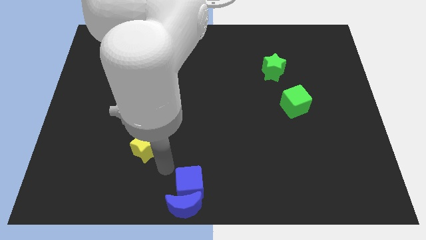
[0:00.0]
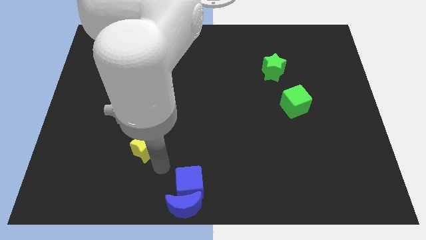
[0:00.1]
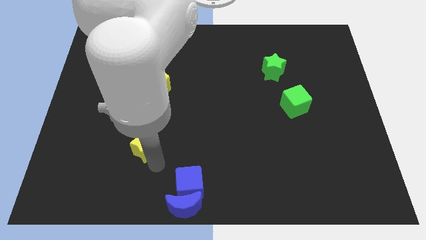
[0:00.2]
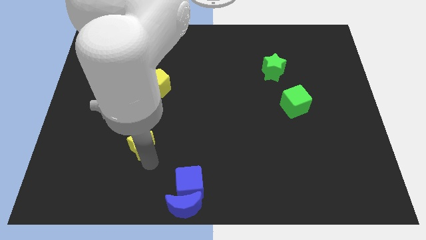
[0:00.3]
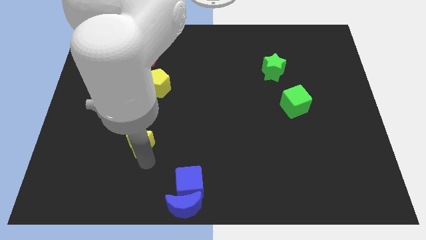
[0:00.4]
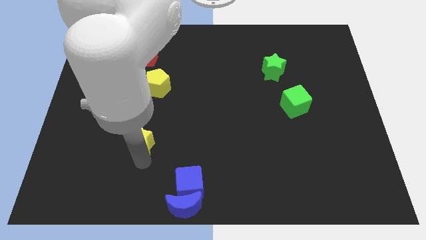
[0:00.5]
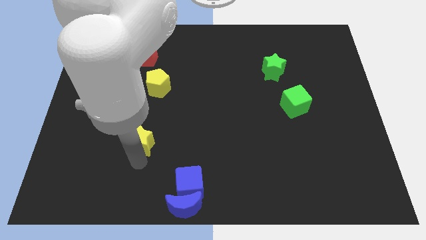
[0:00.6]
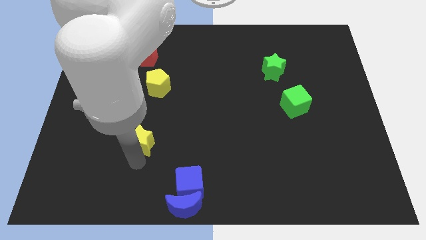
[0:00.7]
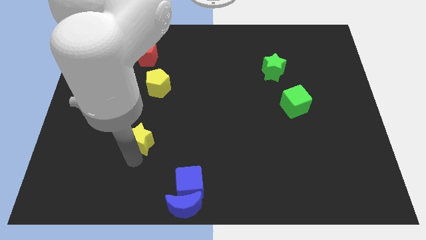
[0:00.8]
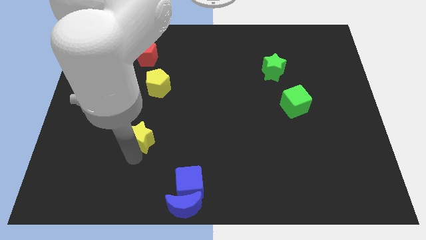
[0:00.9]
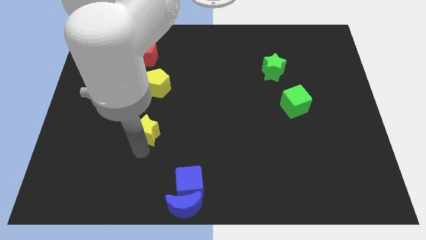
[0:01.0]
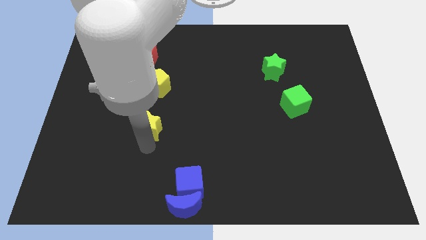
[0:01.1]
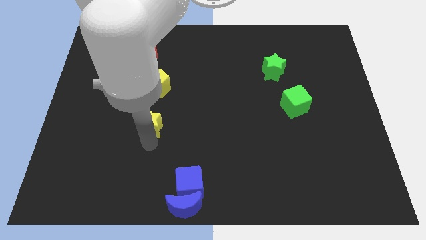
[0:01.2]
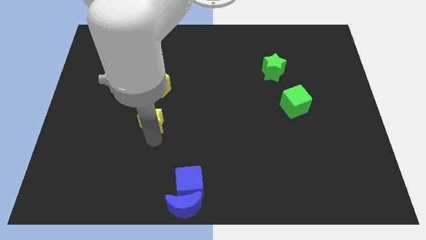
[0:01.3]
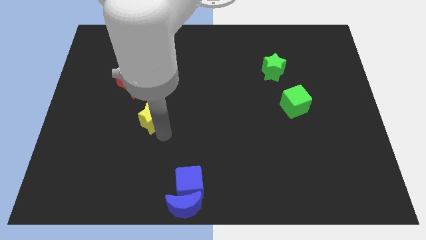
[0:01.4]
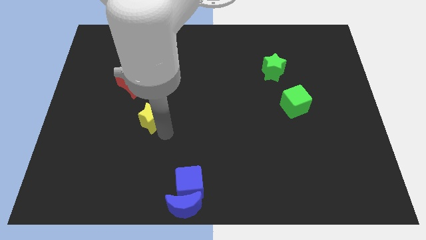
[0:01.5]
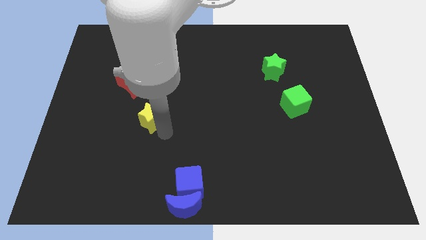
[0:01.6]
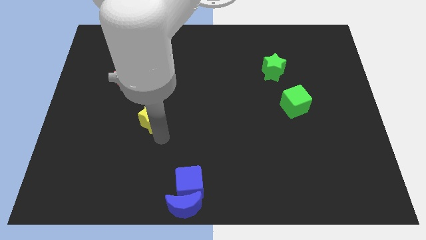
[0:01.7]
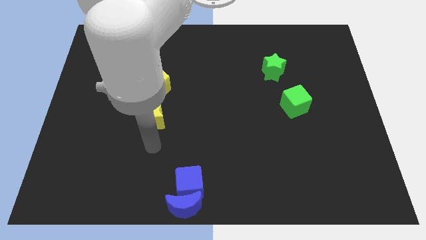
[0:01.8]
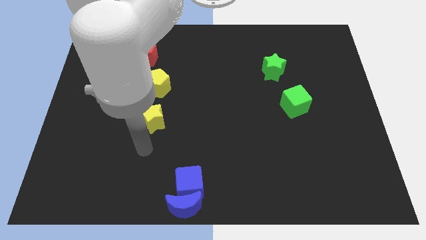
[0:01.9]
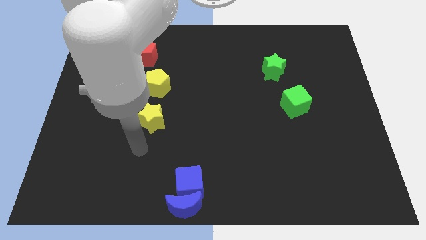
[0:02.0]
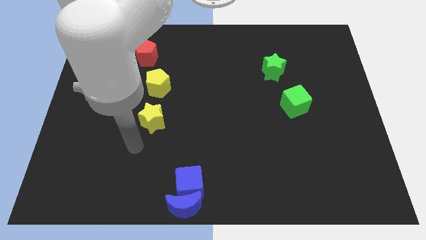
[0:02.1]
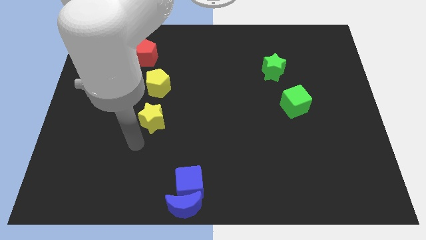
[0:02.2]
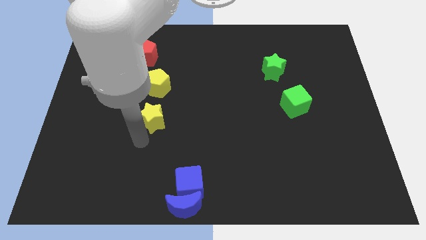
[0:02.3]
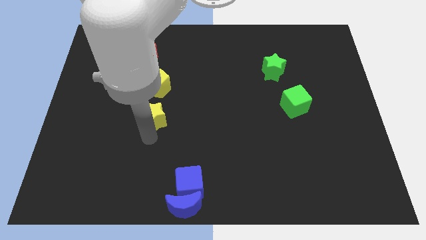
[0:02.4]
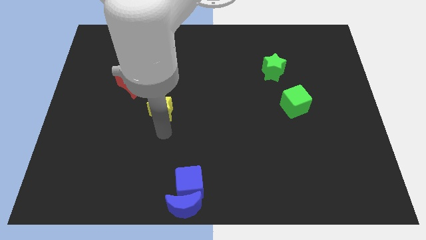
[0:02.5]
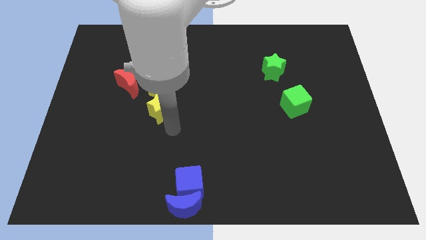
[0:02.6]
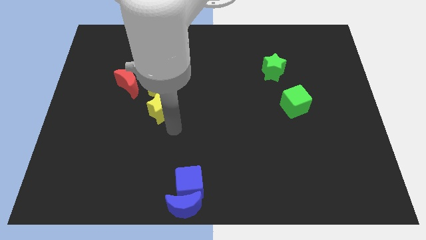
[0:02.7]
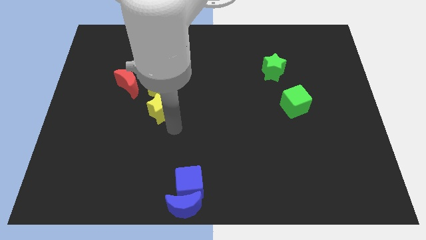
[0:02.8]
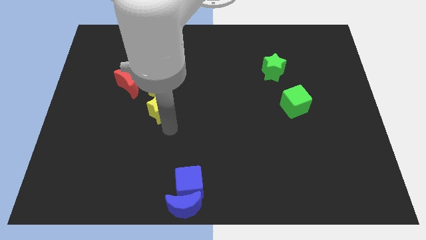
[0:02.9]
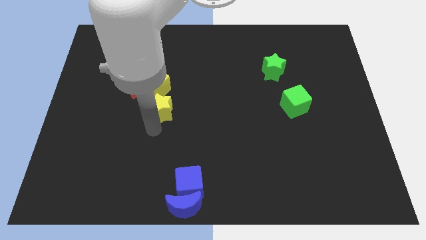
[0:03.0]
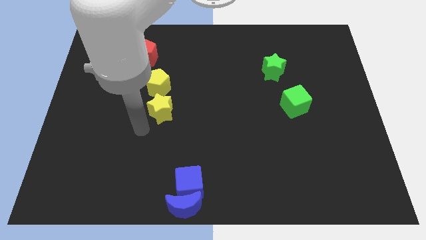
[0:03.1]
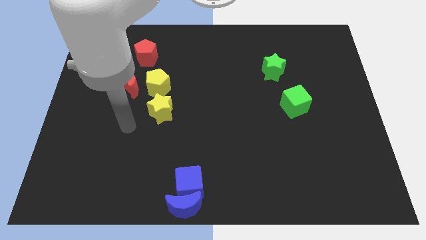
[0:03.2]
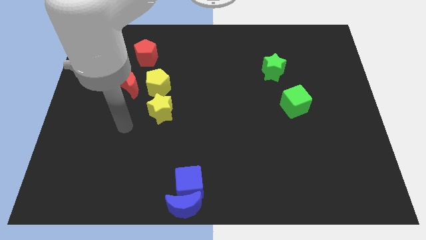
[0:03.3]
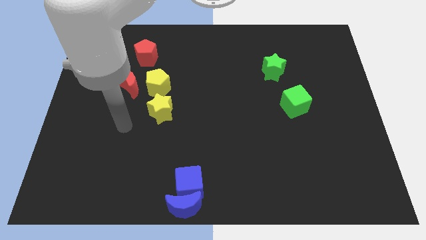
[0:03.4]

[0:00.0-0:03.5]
move the yellow star into the yellow pentagon

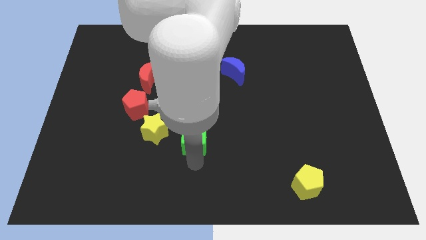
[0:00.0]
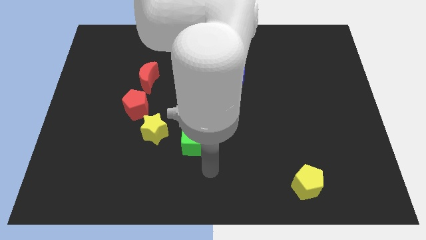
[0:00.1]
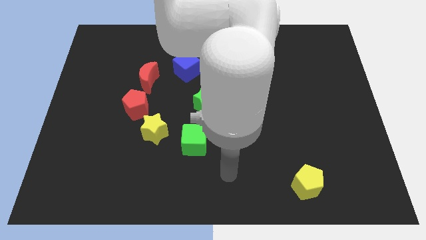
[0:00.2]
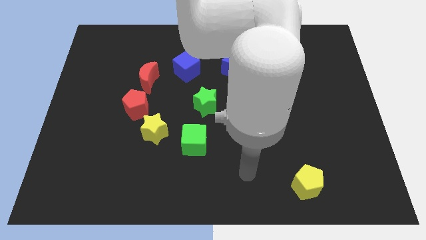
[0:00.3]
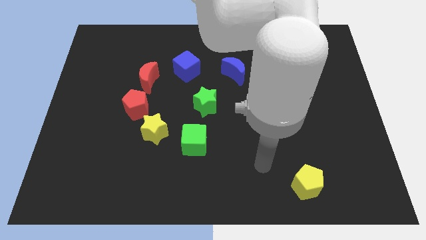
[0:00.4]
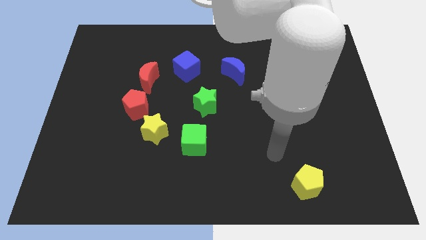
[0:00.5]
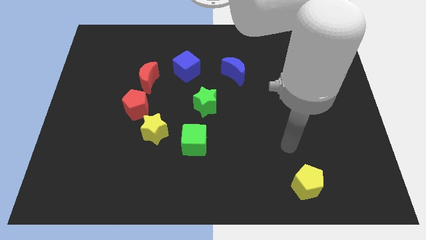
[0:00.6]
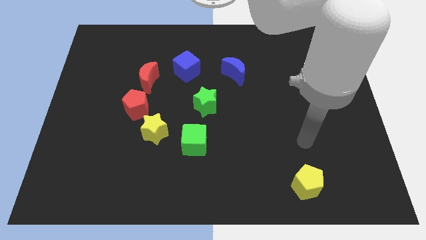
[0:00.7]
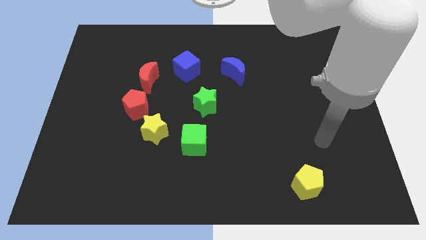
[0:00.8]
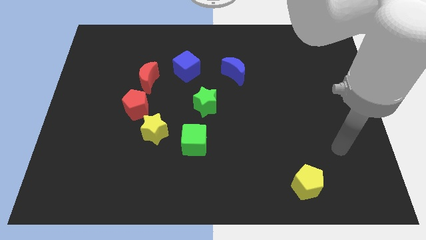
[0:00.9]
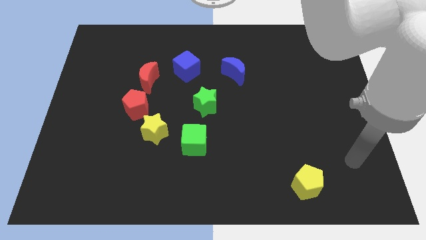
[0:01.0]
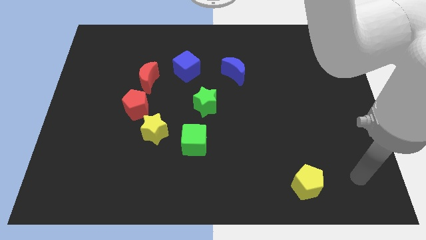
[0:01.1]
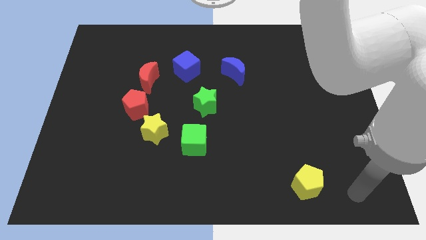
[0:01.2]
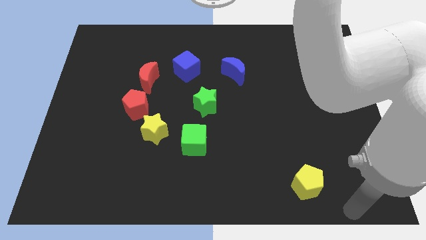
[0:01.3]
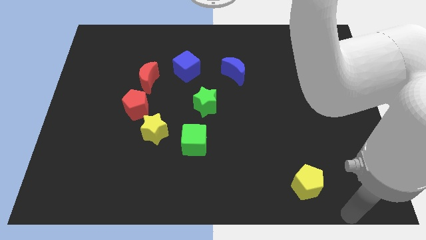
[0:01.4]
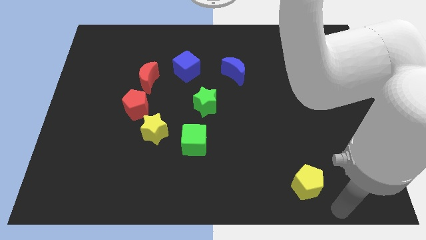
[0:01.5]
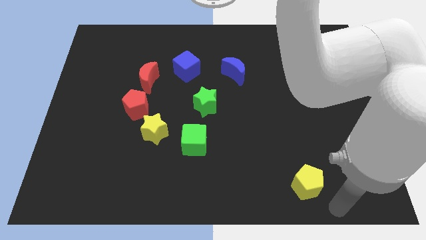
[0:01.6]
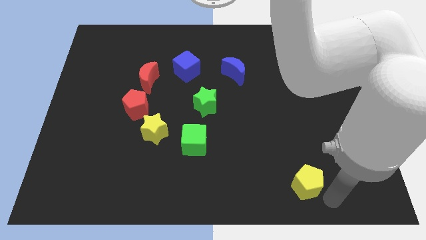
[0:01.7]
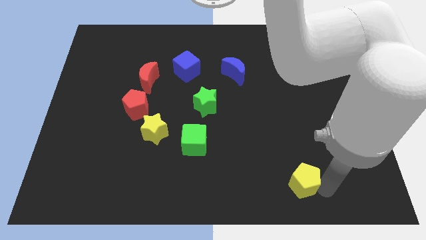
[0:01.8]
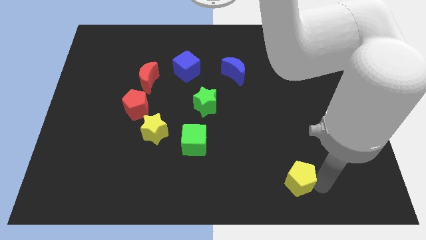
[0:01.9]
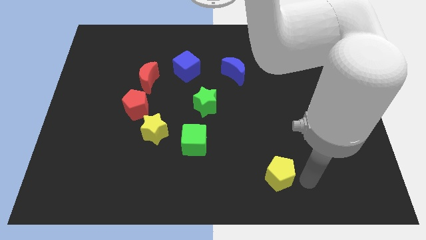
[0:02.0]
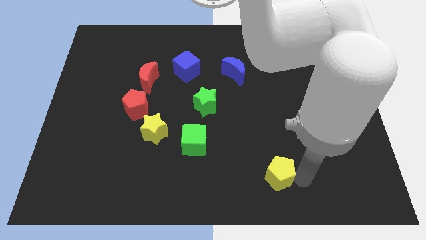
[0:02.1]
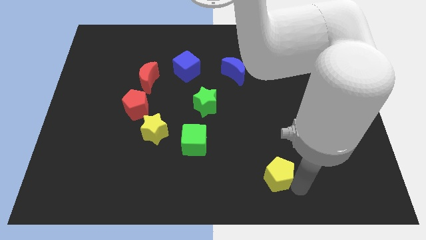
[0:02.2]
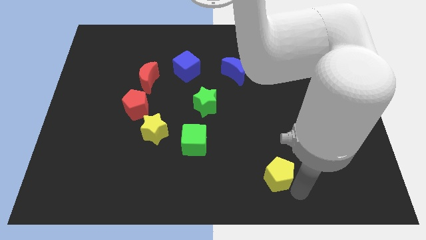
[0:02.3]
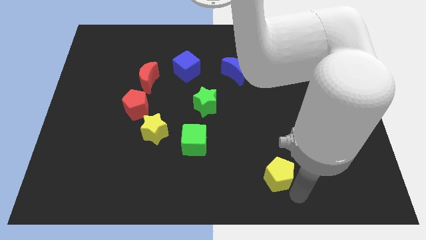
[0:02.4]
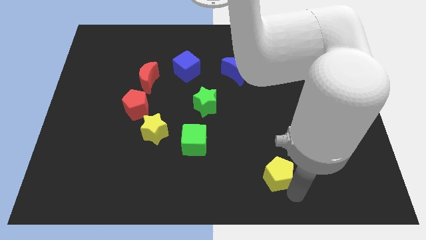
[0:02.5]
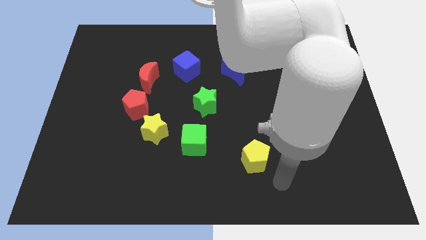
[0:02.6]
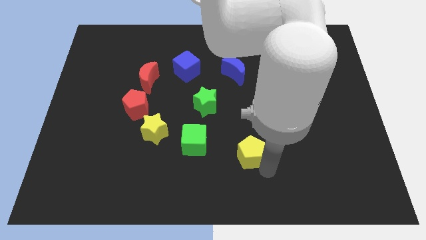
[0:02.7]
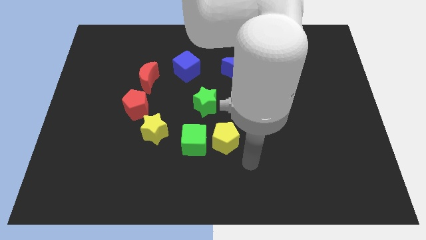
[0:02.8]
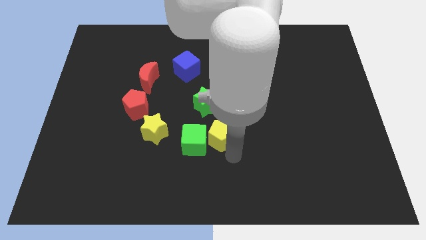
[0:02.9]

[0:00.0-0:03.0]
move the yellow pentagon to the right of the green cube

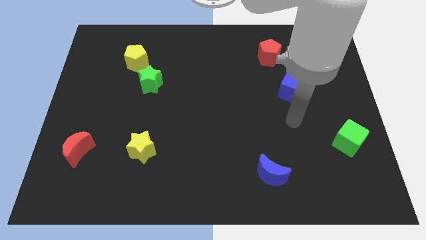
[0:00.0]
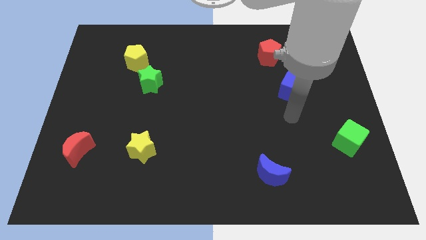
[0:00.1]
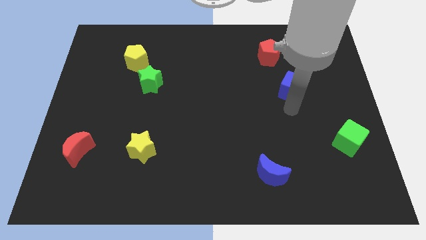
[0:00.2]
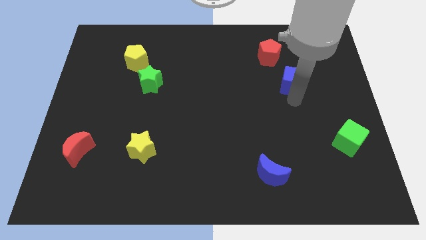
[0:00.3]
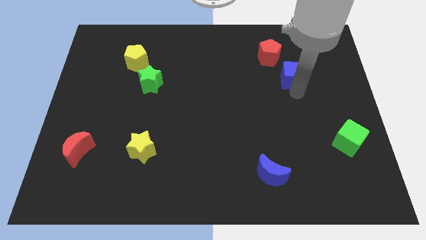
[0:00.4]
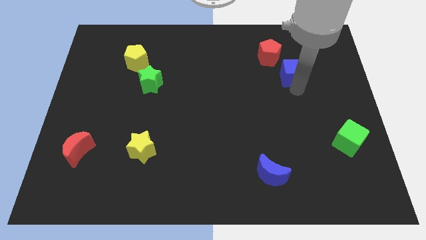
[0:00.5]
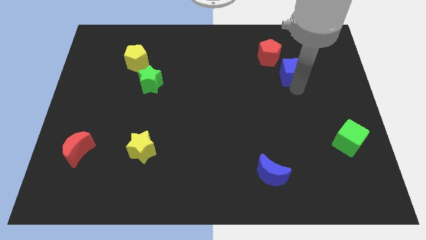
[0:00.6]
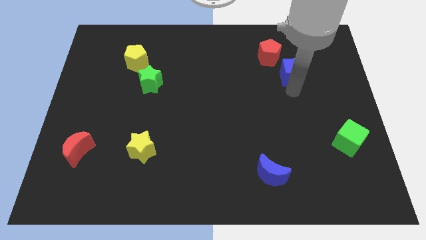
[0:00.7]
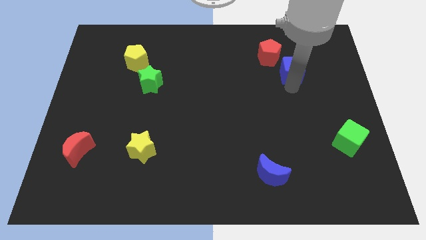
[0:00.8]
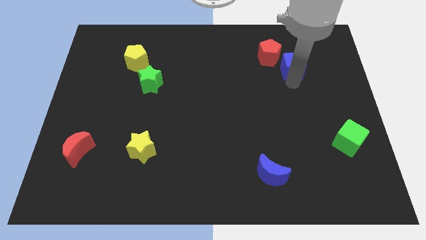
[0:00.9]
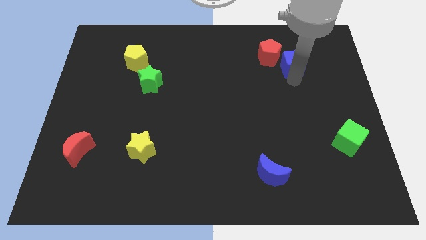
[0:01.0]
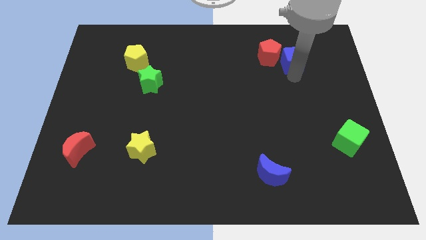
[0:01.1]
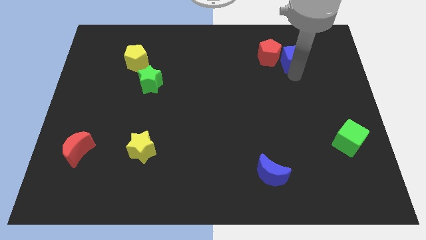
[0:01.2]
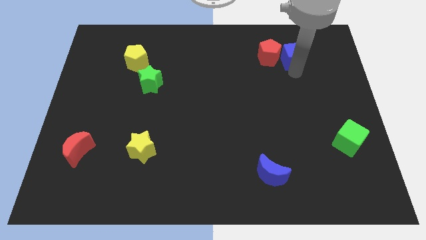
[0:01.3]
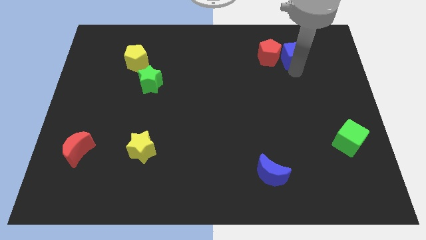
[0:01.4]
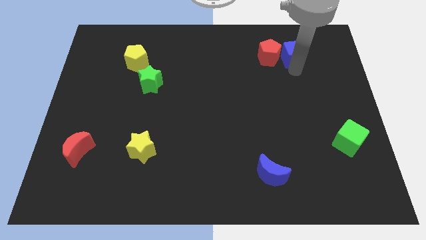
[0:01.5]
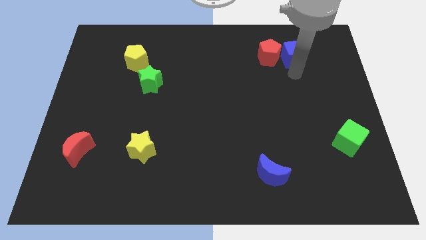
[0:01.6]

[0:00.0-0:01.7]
place the blue cube at right side of the red pentagon

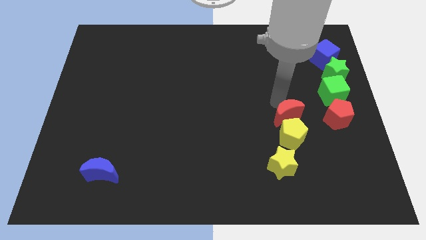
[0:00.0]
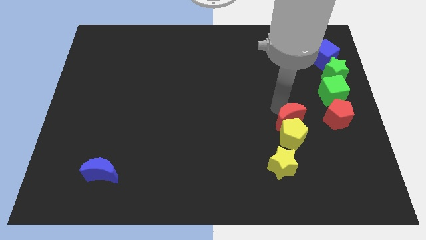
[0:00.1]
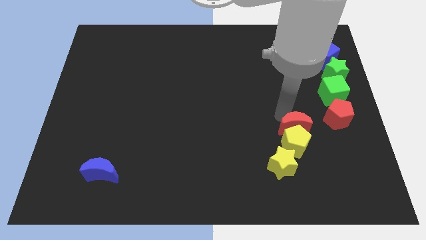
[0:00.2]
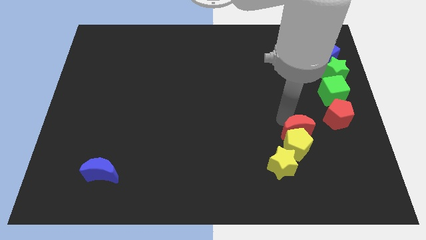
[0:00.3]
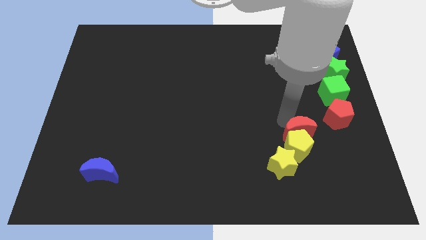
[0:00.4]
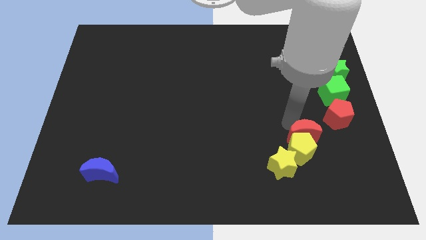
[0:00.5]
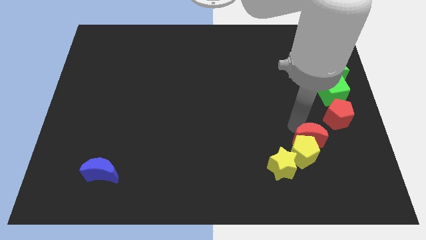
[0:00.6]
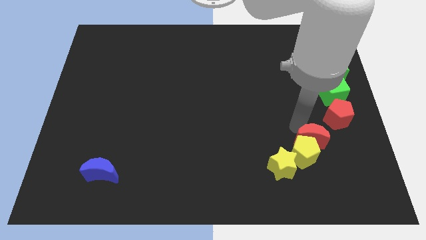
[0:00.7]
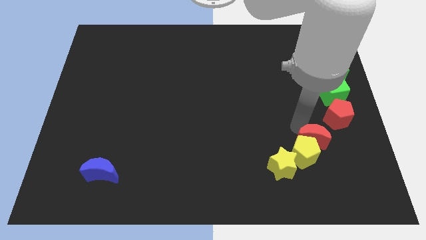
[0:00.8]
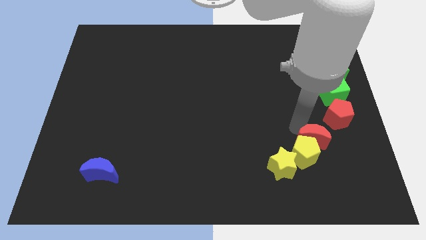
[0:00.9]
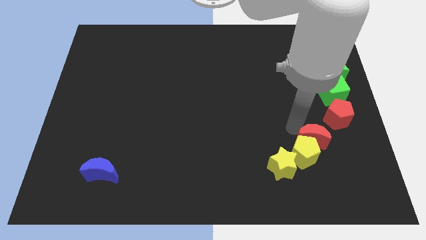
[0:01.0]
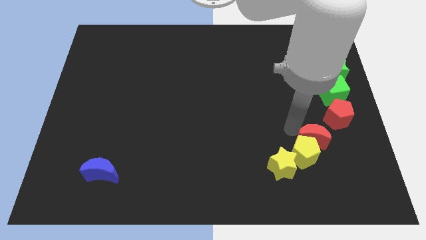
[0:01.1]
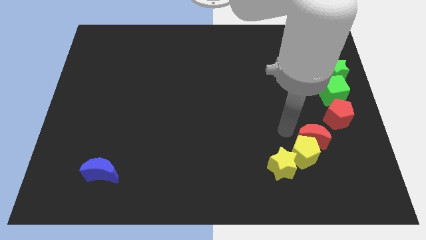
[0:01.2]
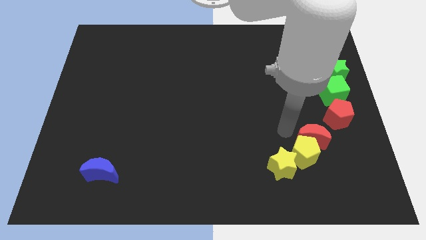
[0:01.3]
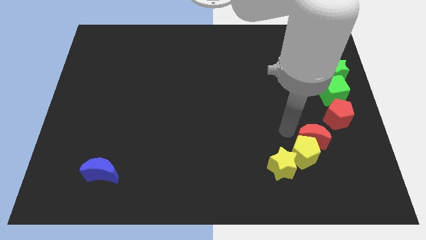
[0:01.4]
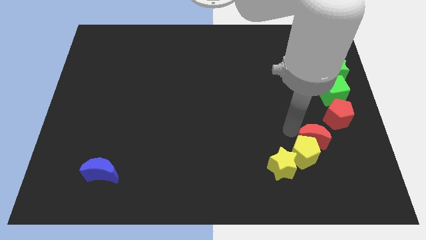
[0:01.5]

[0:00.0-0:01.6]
push the red crescent between the yellow pentagon and red pentagon
